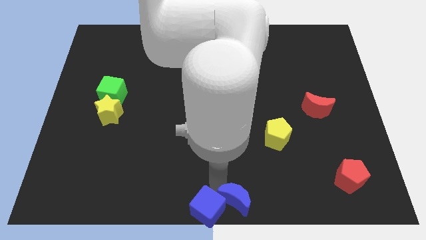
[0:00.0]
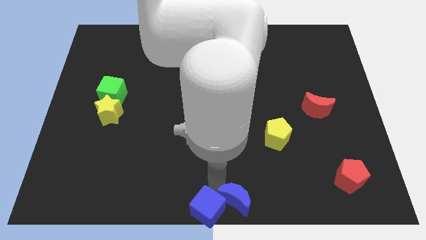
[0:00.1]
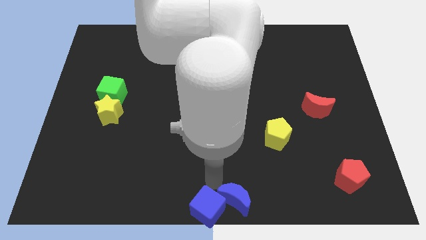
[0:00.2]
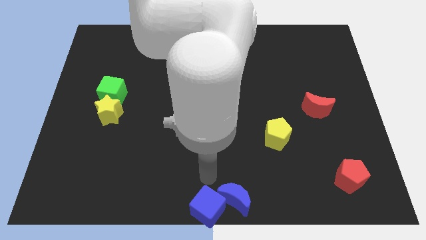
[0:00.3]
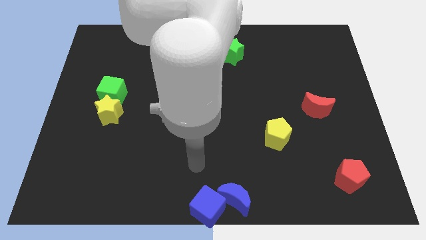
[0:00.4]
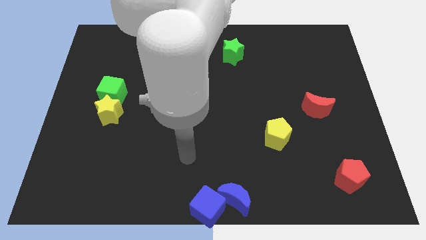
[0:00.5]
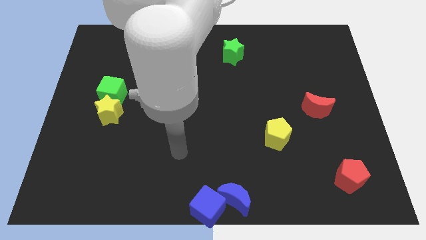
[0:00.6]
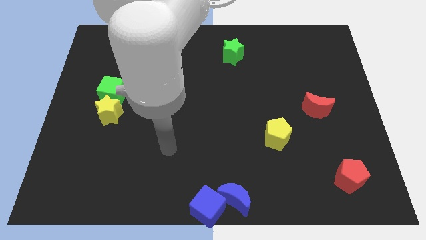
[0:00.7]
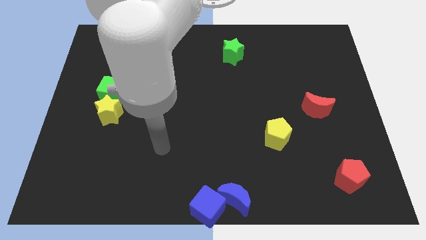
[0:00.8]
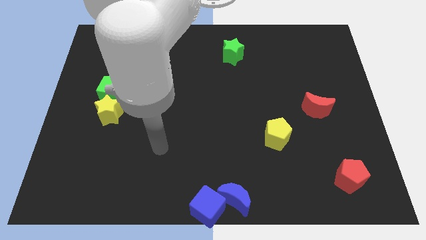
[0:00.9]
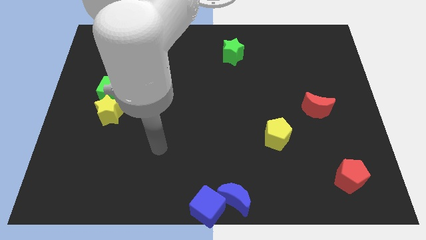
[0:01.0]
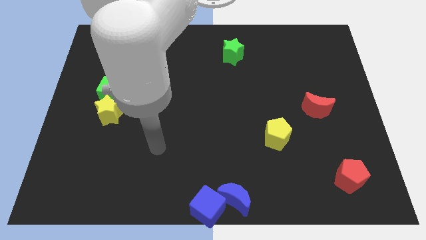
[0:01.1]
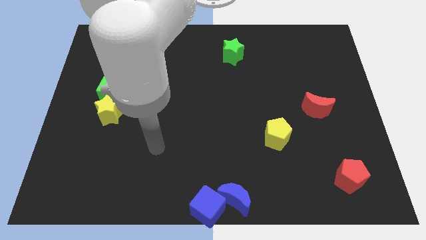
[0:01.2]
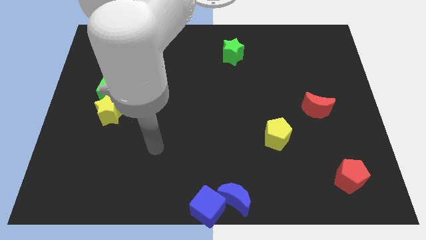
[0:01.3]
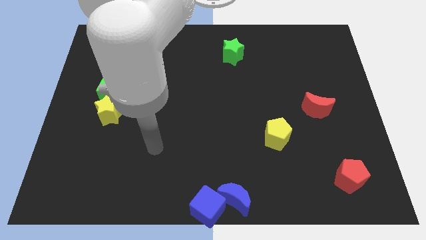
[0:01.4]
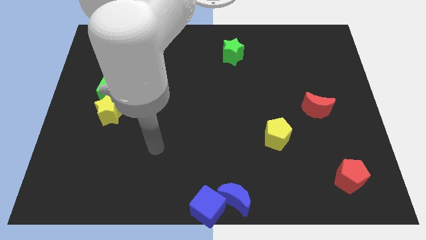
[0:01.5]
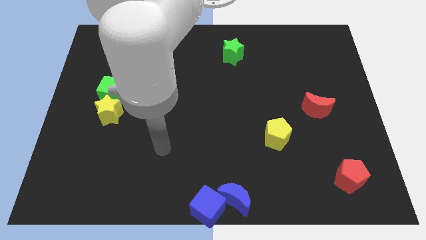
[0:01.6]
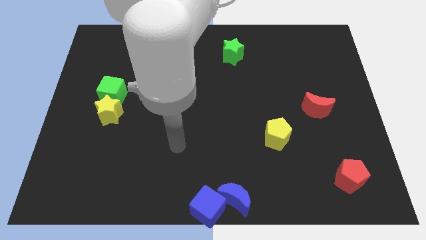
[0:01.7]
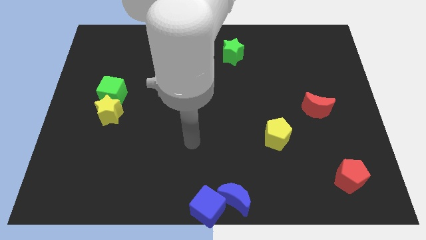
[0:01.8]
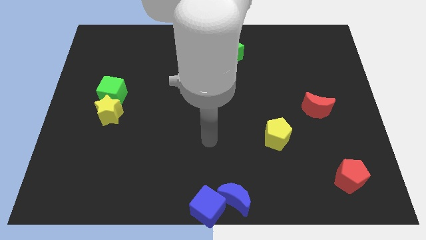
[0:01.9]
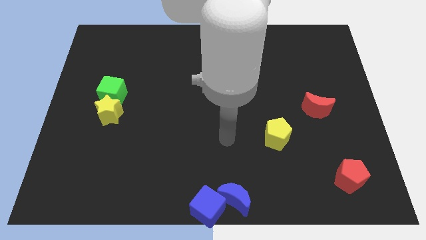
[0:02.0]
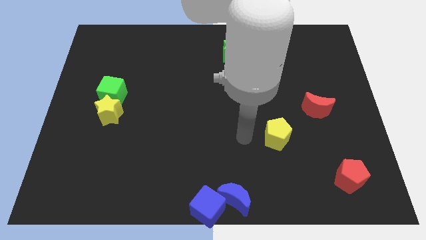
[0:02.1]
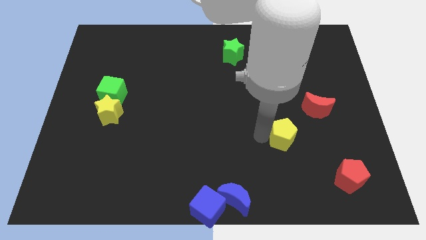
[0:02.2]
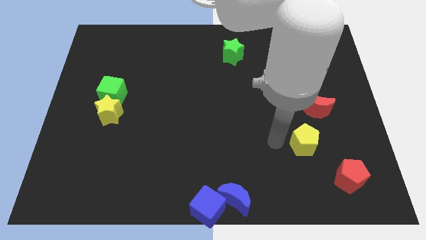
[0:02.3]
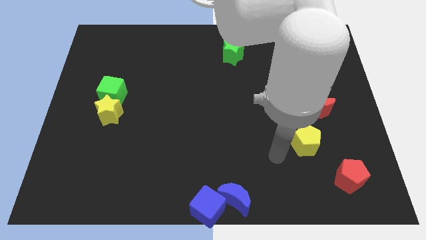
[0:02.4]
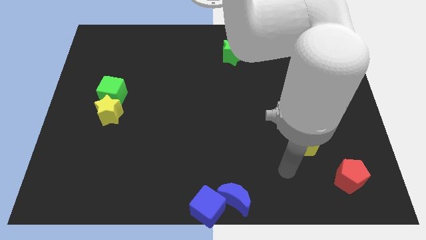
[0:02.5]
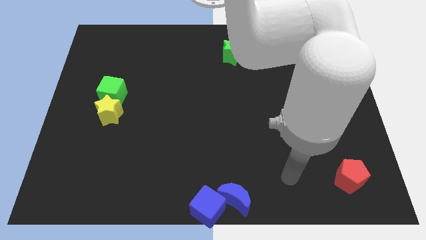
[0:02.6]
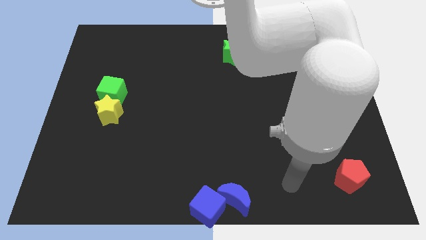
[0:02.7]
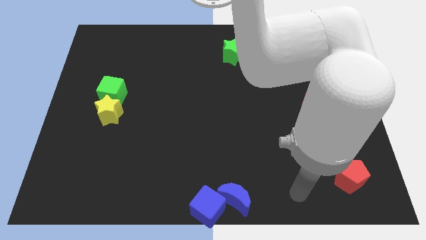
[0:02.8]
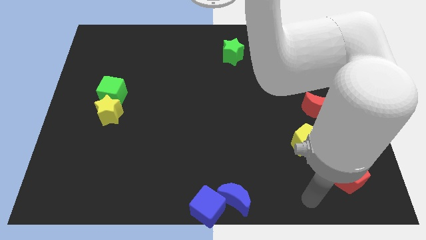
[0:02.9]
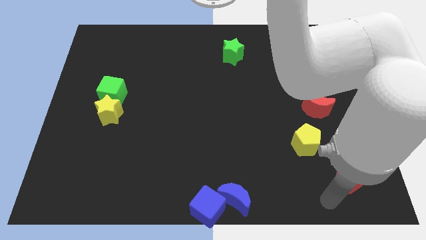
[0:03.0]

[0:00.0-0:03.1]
push the yellow pentagon to the bottom of the red crescent

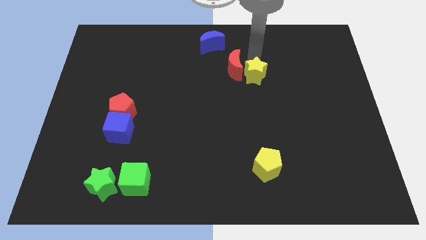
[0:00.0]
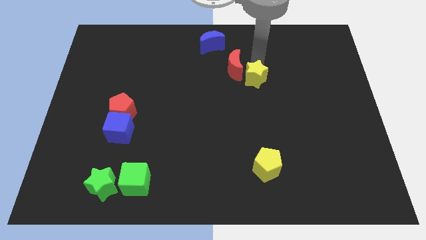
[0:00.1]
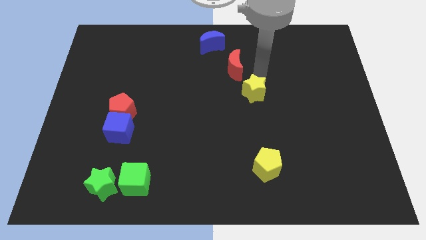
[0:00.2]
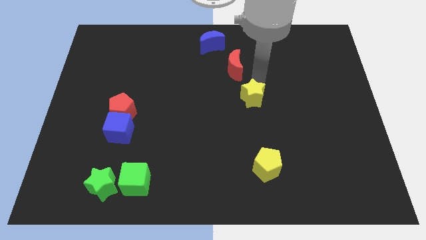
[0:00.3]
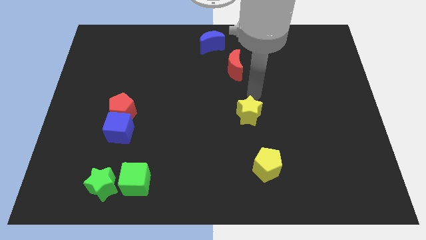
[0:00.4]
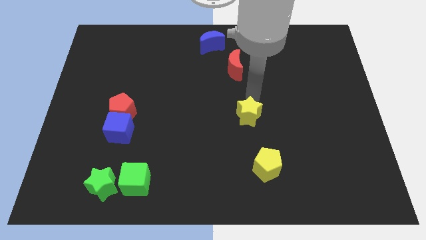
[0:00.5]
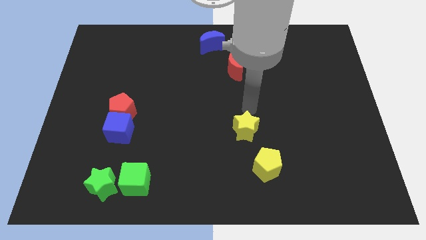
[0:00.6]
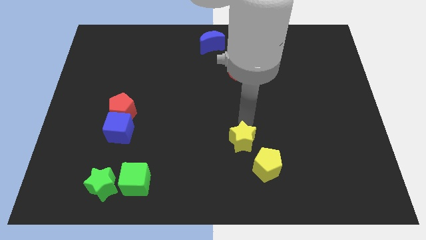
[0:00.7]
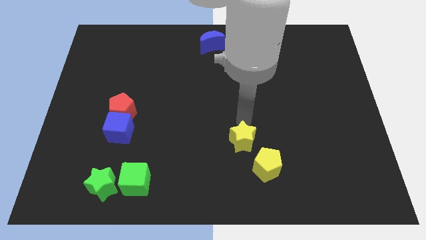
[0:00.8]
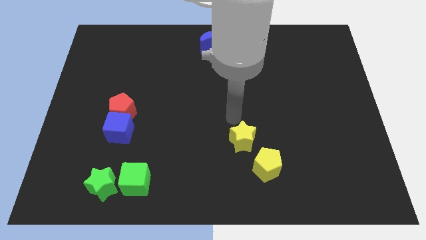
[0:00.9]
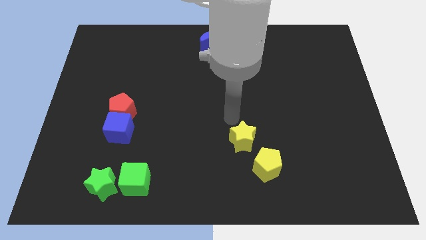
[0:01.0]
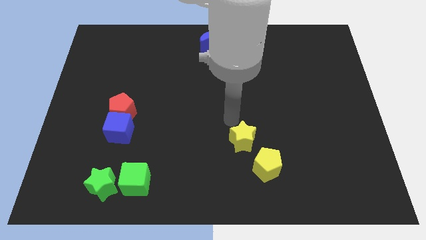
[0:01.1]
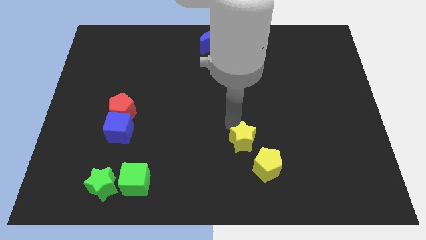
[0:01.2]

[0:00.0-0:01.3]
move the yellow star to the top left of the yellow pentagon

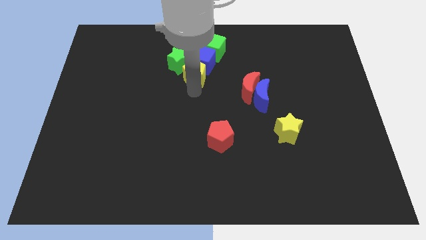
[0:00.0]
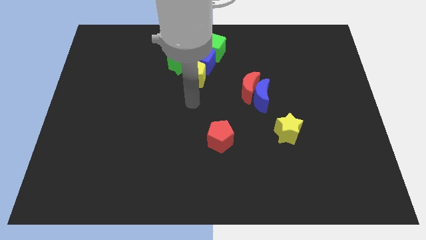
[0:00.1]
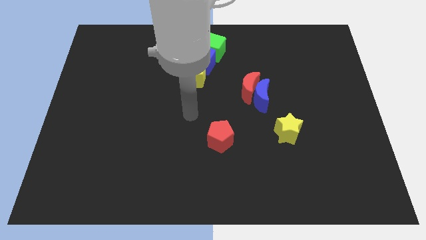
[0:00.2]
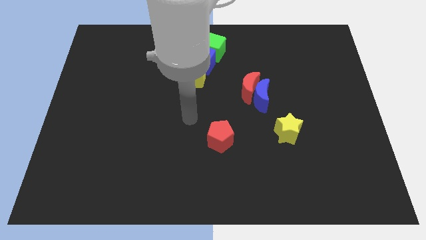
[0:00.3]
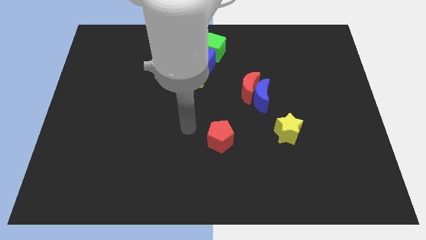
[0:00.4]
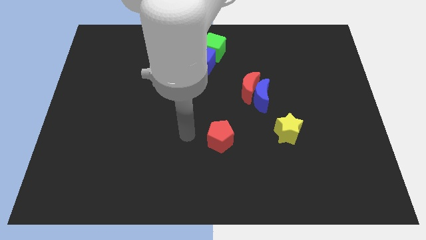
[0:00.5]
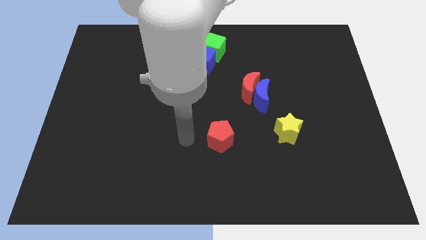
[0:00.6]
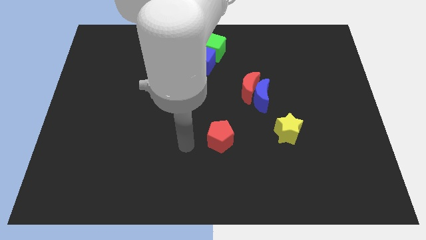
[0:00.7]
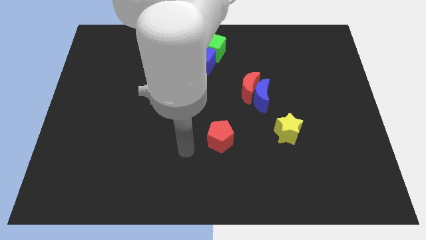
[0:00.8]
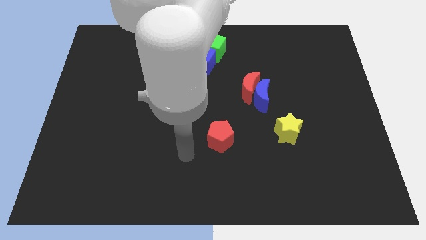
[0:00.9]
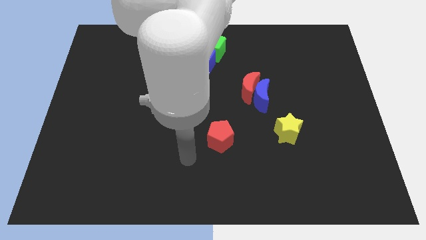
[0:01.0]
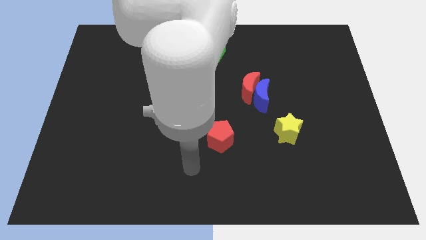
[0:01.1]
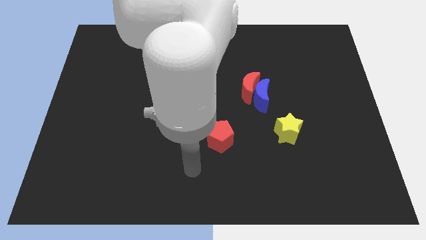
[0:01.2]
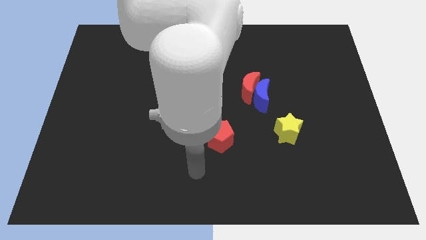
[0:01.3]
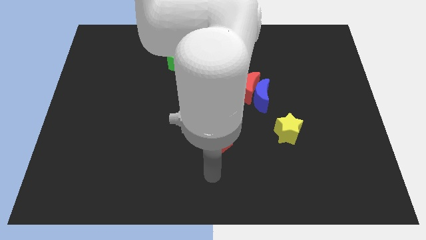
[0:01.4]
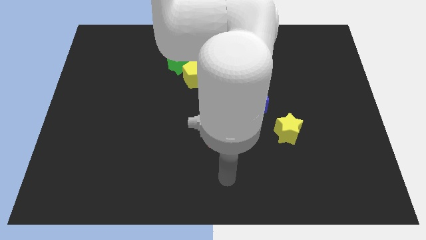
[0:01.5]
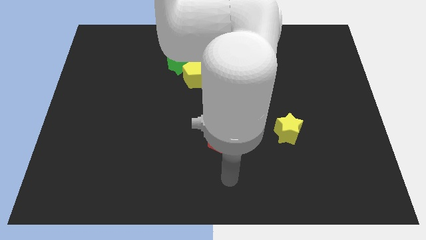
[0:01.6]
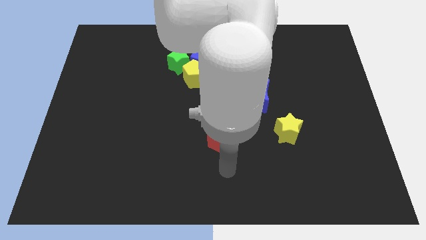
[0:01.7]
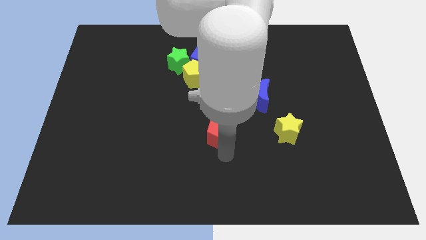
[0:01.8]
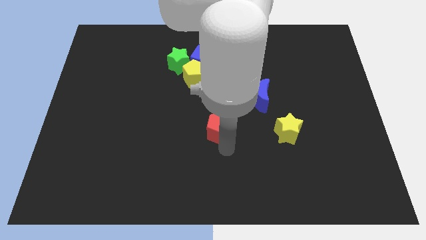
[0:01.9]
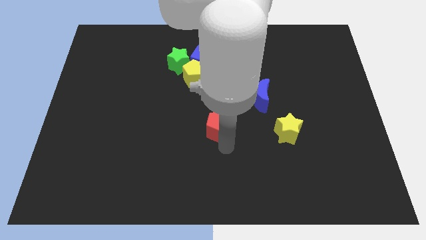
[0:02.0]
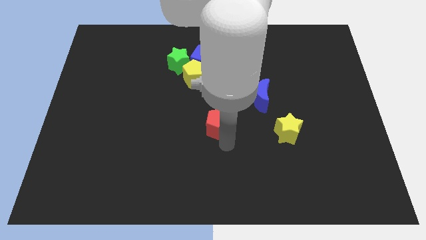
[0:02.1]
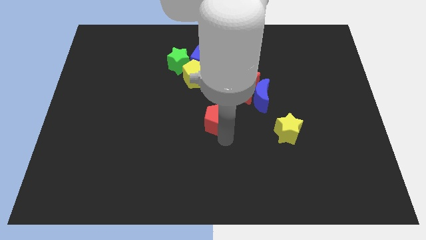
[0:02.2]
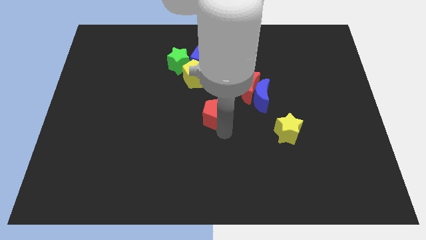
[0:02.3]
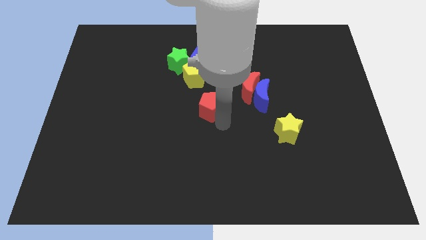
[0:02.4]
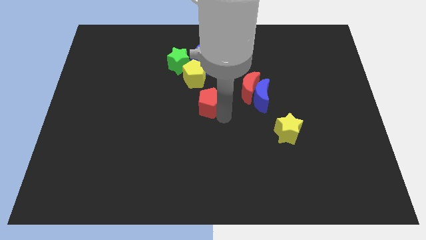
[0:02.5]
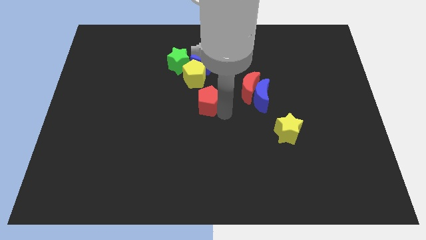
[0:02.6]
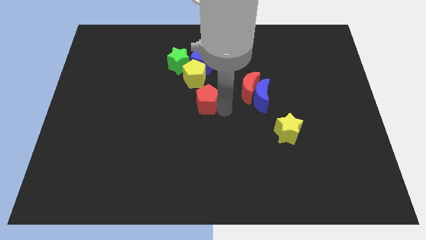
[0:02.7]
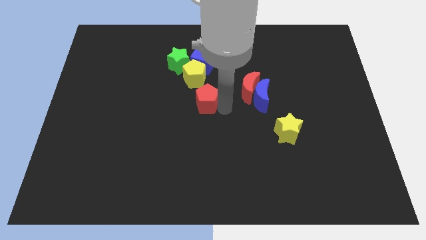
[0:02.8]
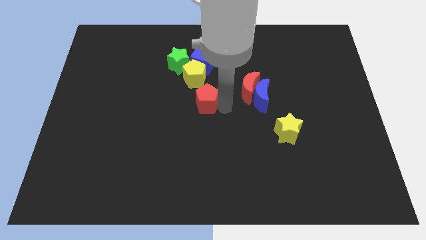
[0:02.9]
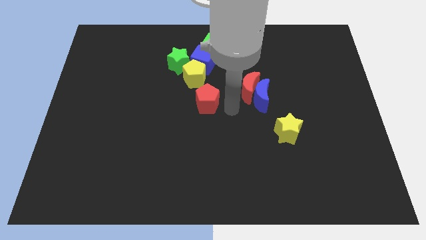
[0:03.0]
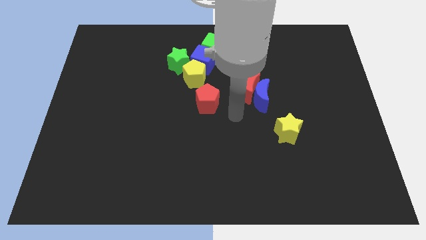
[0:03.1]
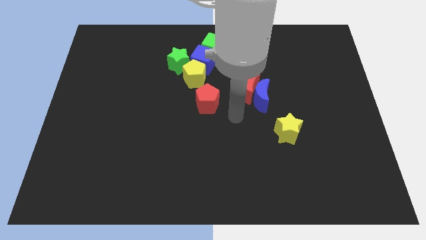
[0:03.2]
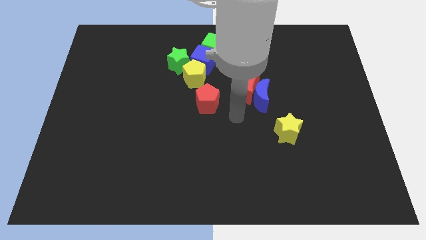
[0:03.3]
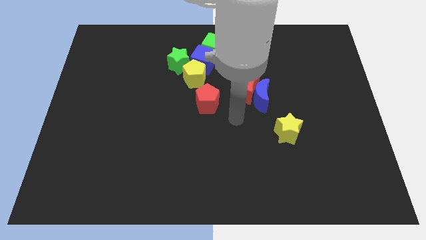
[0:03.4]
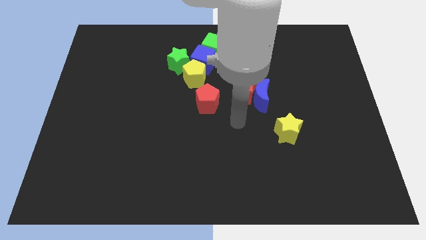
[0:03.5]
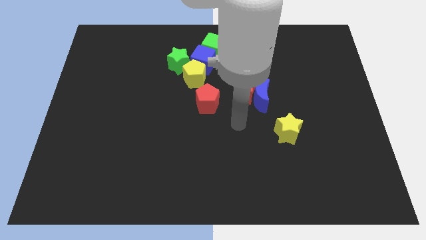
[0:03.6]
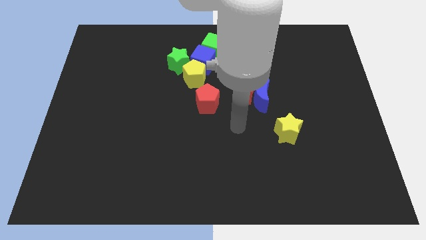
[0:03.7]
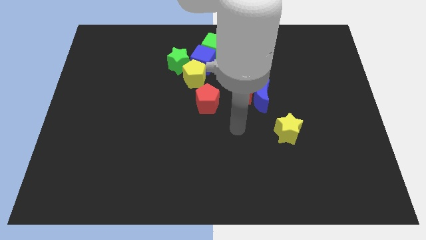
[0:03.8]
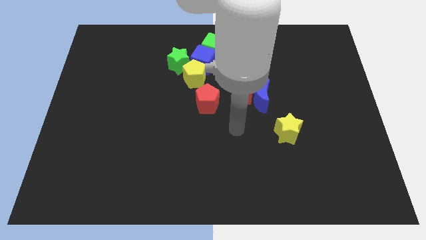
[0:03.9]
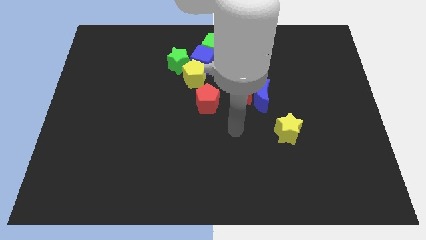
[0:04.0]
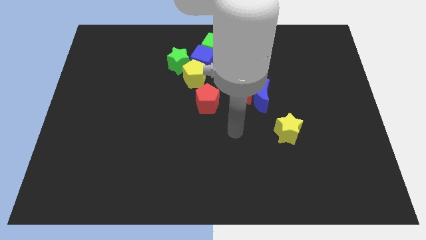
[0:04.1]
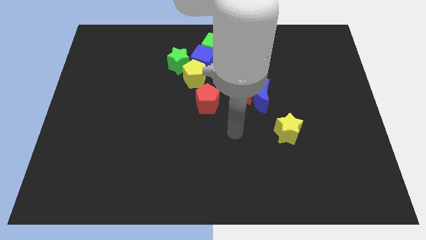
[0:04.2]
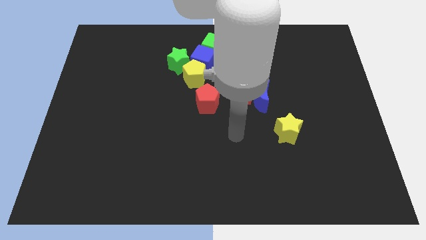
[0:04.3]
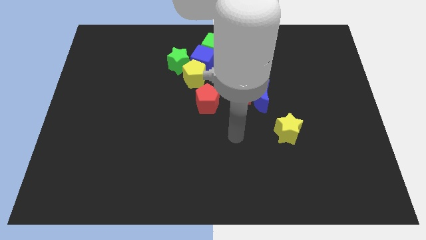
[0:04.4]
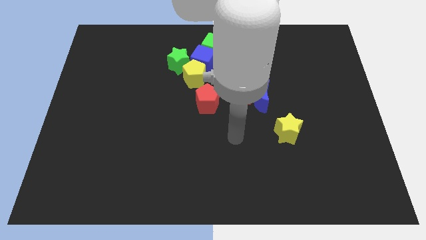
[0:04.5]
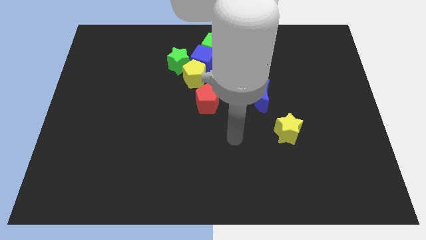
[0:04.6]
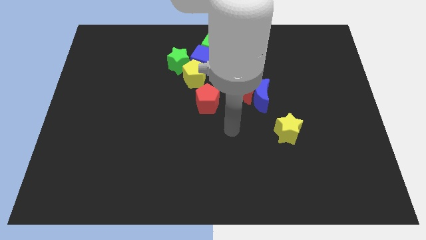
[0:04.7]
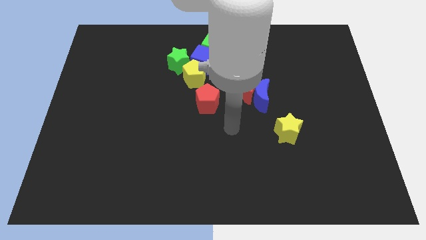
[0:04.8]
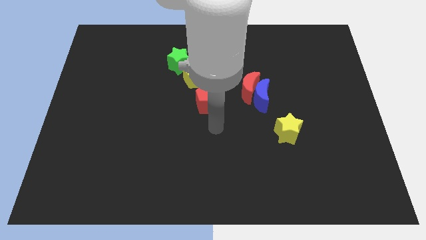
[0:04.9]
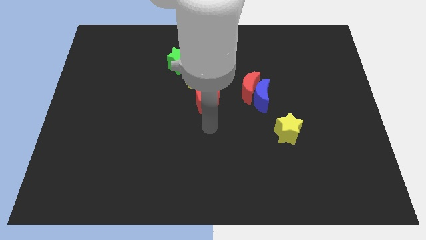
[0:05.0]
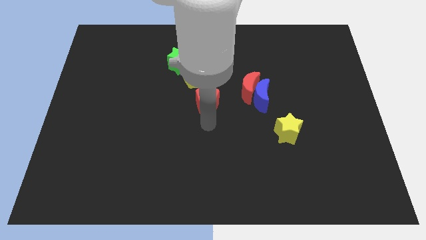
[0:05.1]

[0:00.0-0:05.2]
move the red pentagon to the bottom of the yellow pentagon
